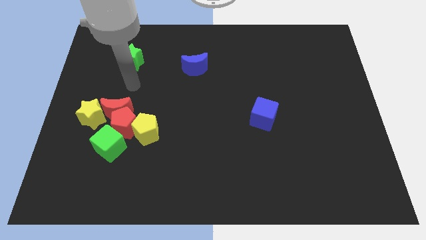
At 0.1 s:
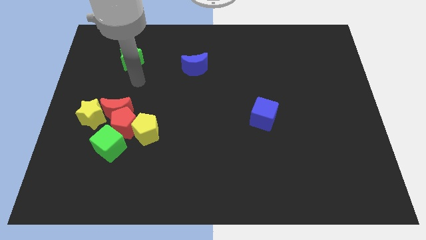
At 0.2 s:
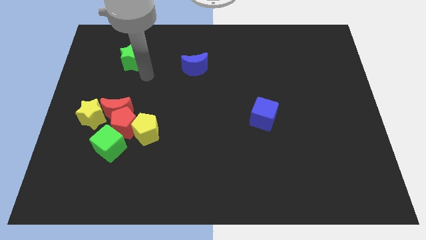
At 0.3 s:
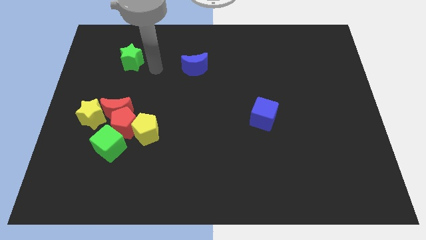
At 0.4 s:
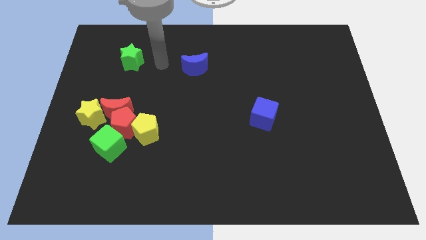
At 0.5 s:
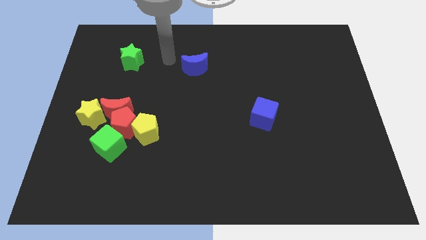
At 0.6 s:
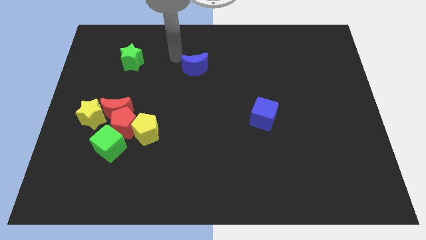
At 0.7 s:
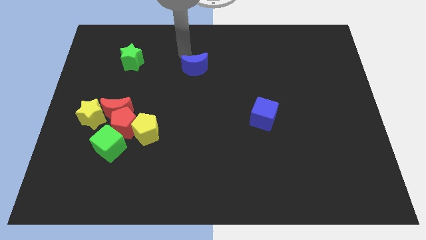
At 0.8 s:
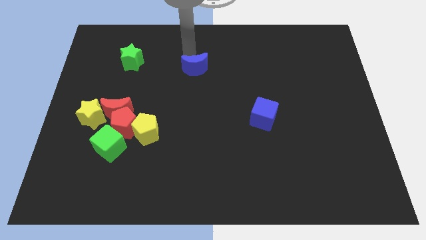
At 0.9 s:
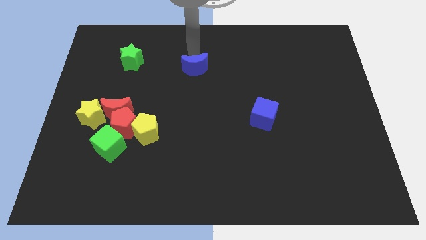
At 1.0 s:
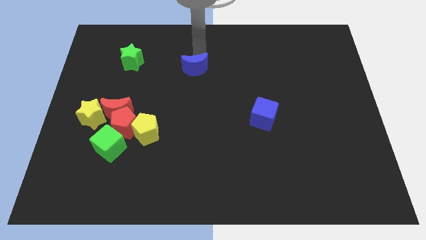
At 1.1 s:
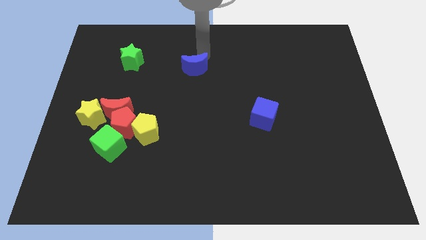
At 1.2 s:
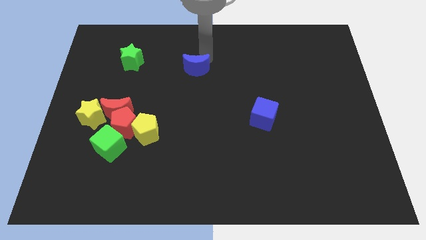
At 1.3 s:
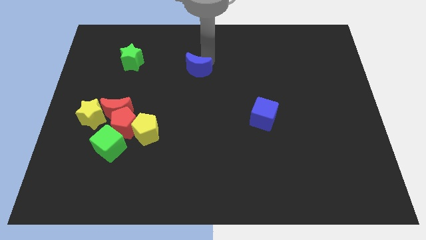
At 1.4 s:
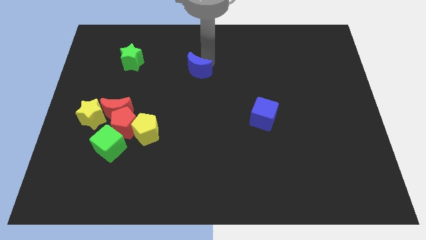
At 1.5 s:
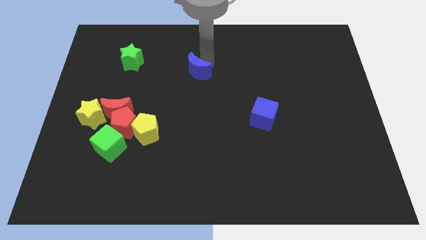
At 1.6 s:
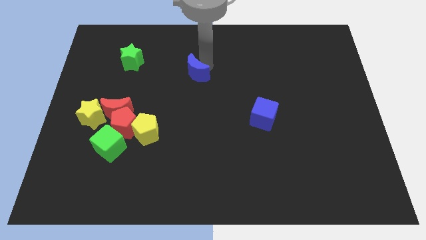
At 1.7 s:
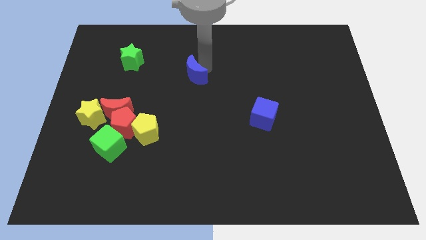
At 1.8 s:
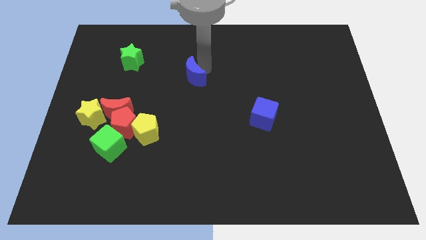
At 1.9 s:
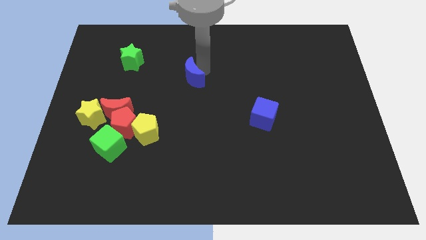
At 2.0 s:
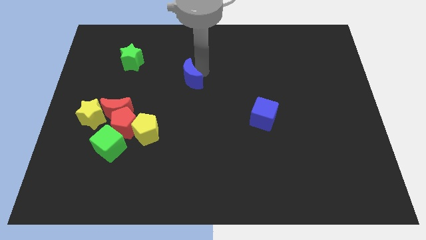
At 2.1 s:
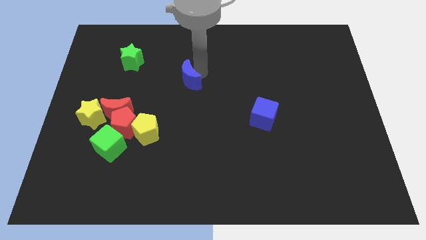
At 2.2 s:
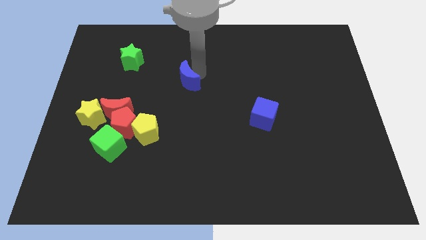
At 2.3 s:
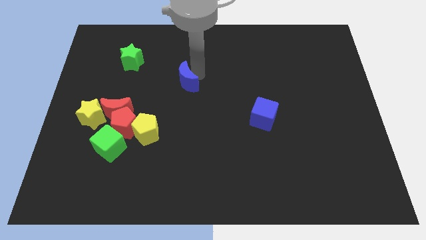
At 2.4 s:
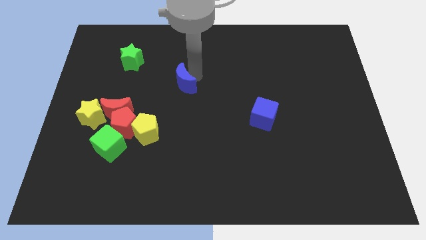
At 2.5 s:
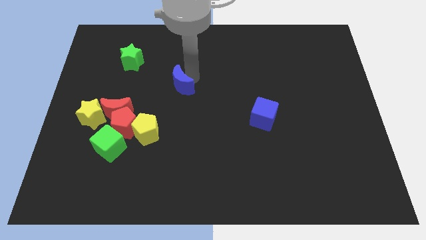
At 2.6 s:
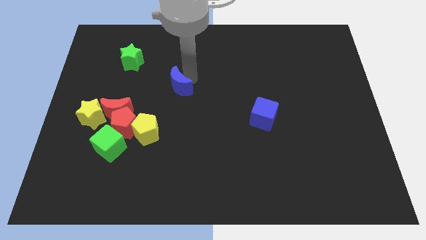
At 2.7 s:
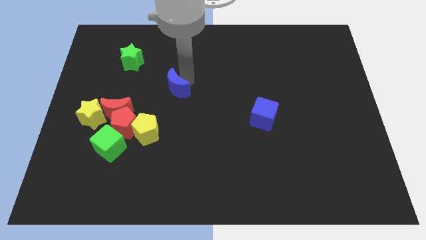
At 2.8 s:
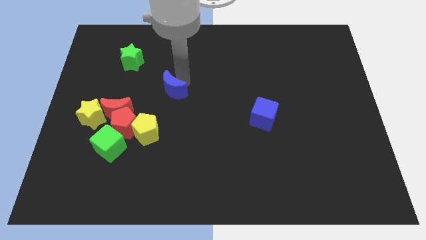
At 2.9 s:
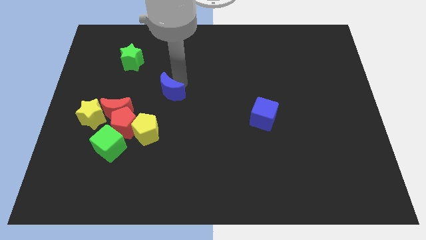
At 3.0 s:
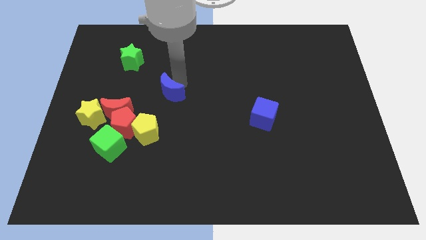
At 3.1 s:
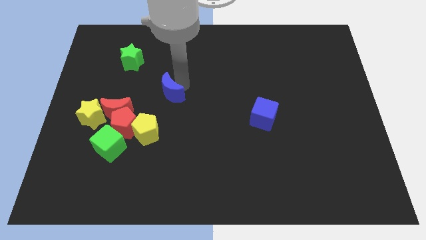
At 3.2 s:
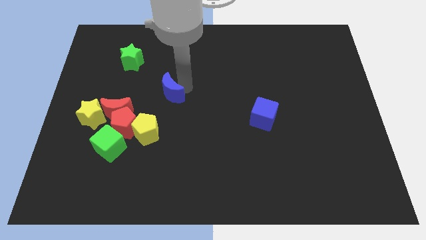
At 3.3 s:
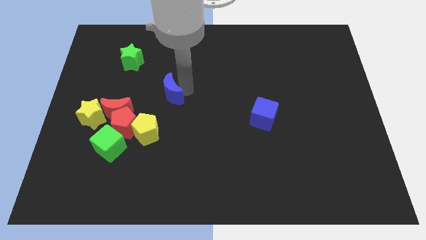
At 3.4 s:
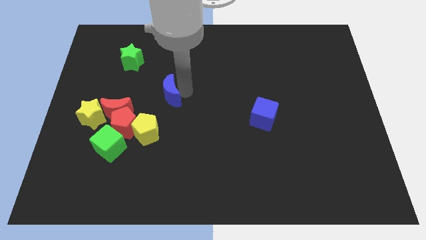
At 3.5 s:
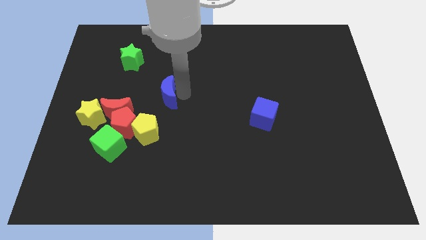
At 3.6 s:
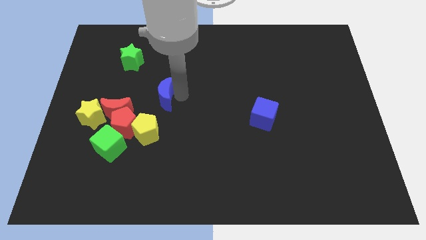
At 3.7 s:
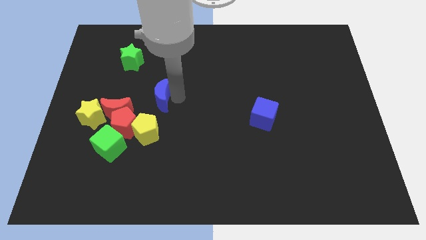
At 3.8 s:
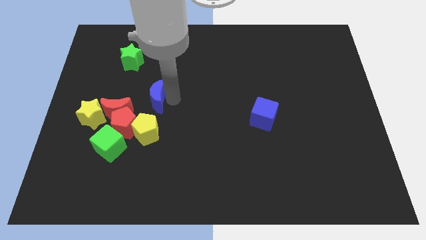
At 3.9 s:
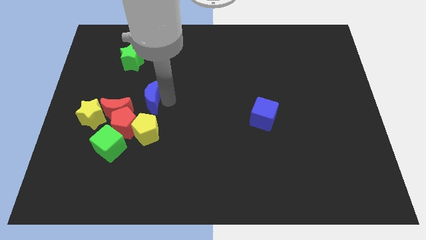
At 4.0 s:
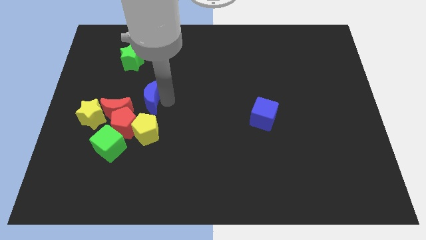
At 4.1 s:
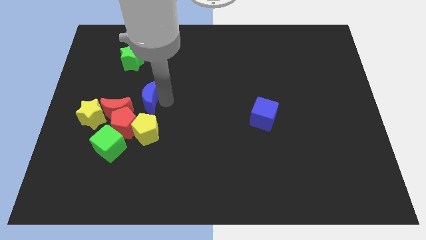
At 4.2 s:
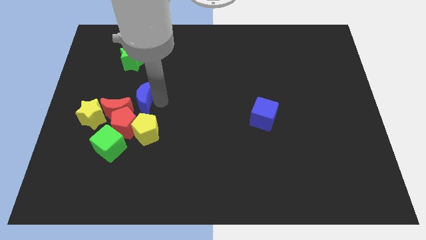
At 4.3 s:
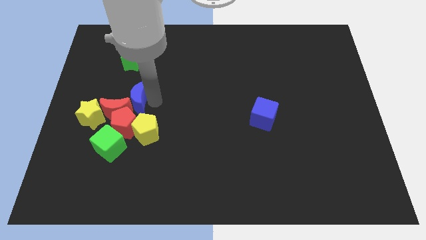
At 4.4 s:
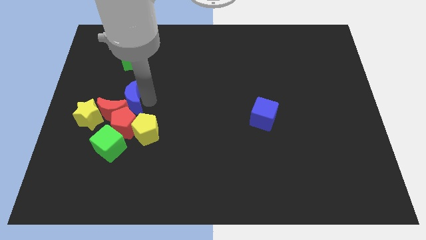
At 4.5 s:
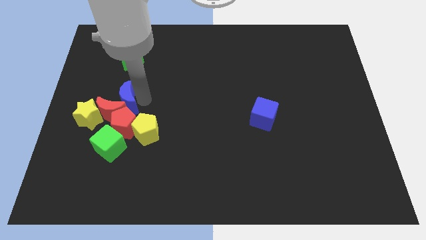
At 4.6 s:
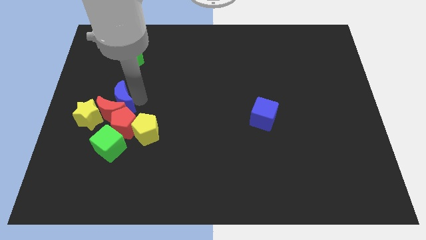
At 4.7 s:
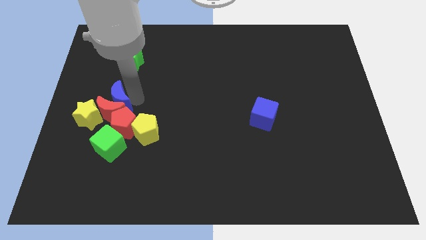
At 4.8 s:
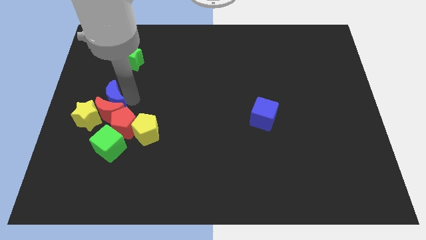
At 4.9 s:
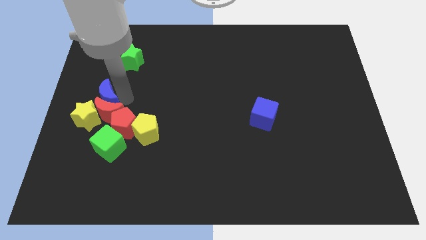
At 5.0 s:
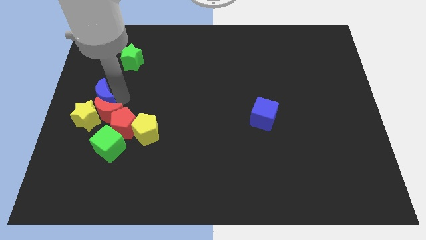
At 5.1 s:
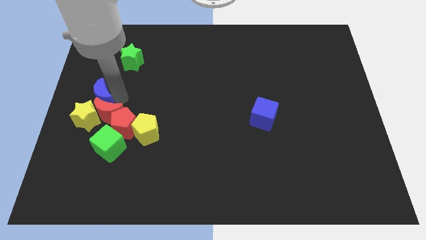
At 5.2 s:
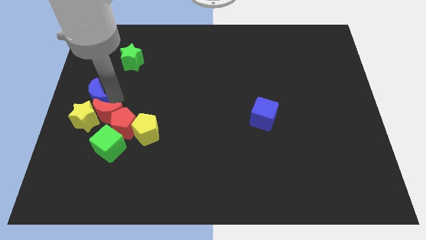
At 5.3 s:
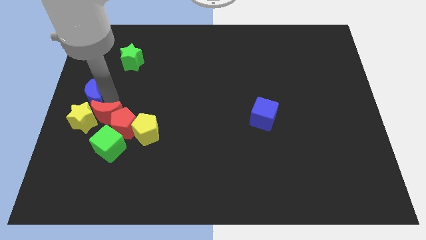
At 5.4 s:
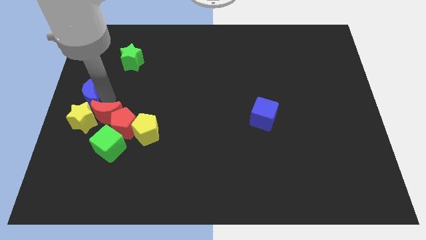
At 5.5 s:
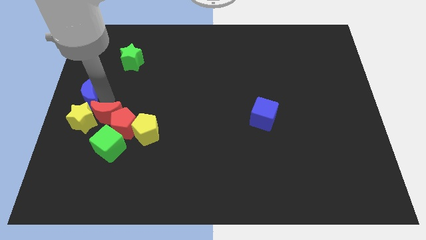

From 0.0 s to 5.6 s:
move the blue moon close to the yellow star

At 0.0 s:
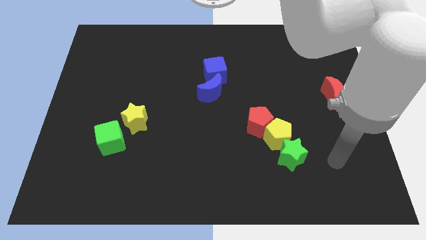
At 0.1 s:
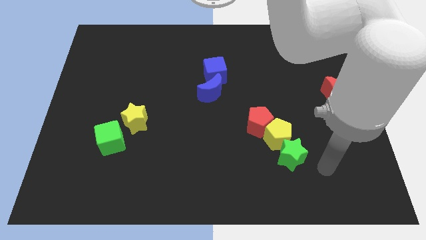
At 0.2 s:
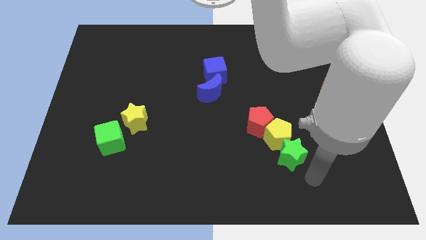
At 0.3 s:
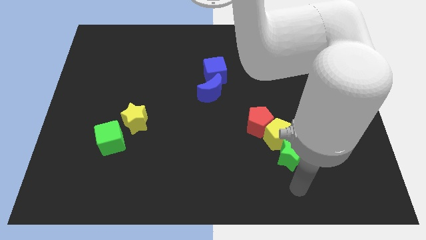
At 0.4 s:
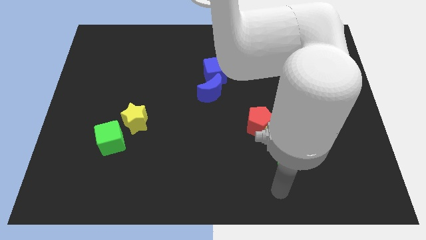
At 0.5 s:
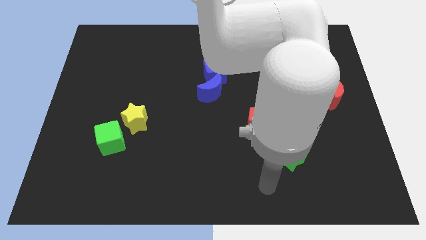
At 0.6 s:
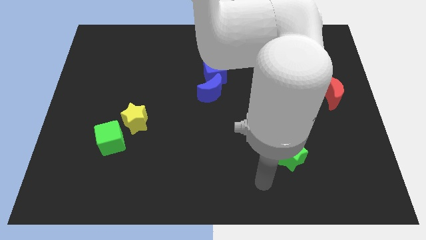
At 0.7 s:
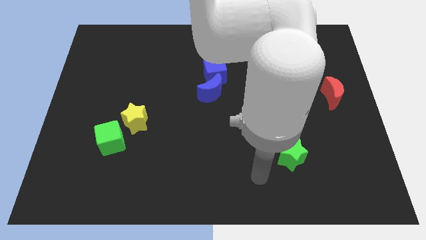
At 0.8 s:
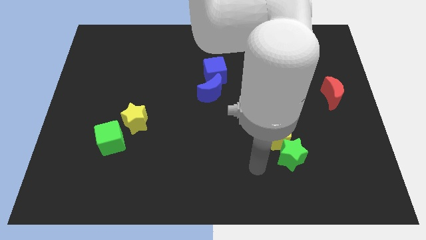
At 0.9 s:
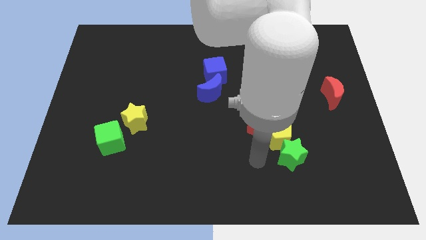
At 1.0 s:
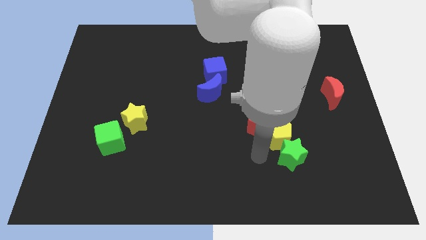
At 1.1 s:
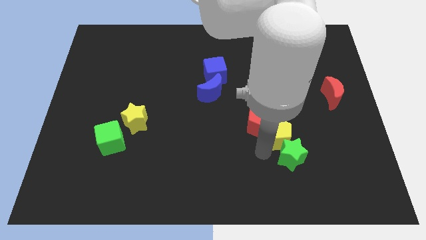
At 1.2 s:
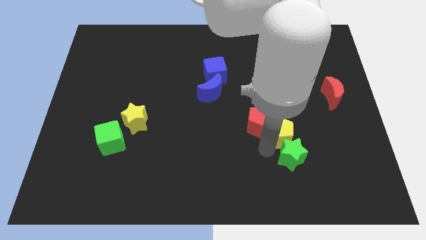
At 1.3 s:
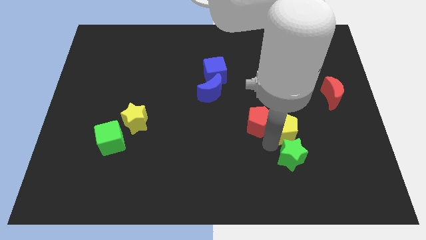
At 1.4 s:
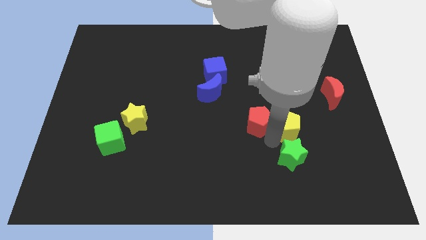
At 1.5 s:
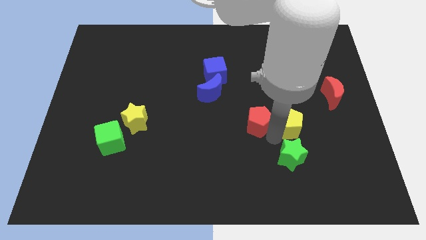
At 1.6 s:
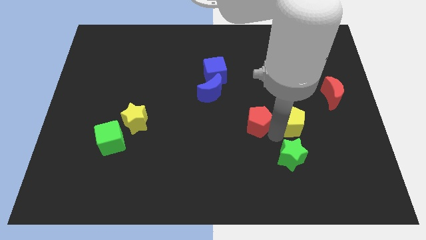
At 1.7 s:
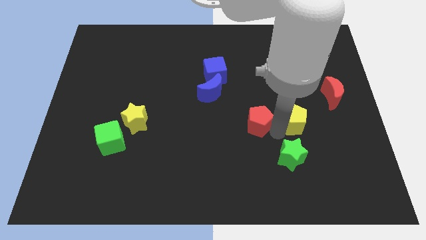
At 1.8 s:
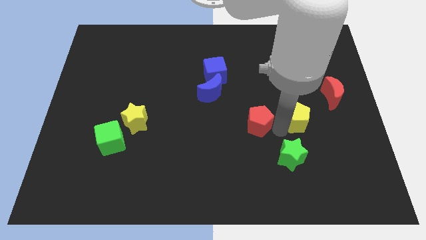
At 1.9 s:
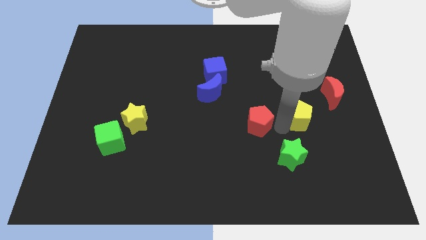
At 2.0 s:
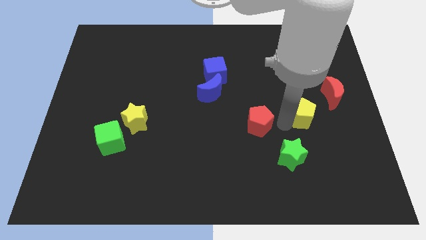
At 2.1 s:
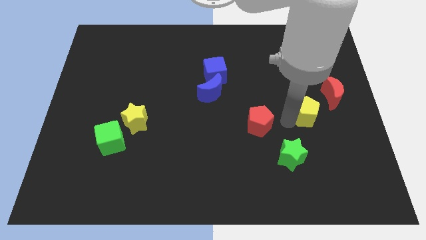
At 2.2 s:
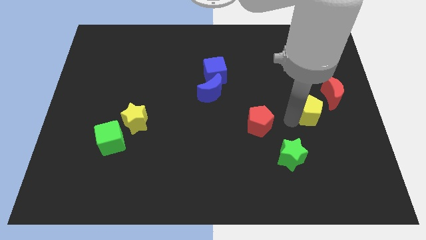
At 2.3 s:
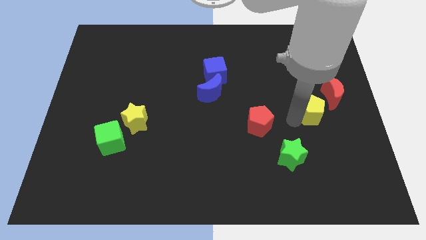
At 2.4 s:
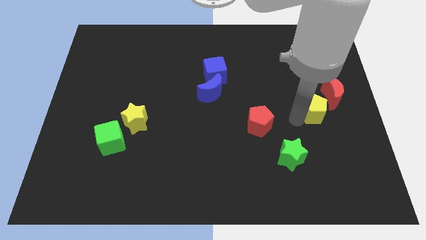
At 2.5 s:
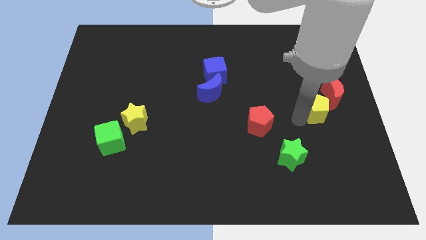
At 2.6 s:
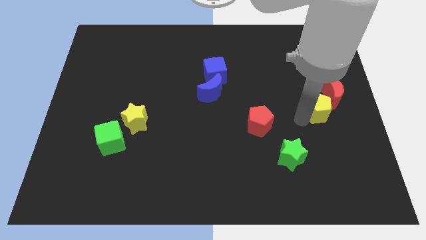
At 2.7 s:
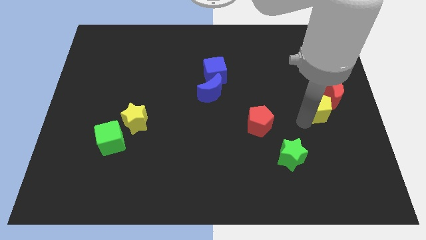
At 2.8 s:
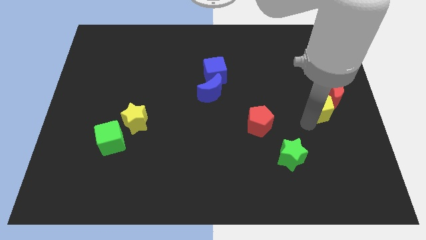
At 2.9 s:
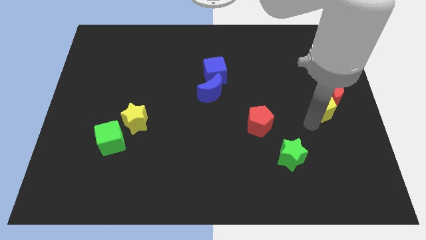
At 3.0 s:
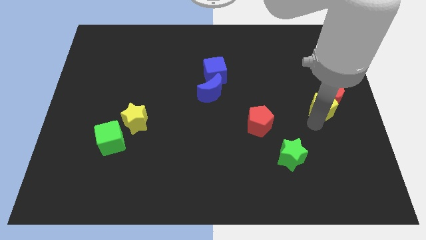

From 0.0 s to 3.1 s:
move the yellow pentagon to the red moon
